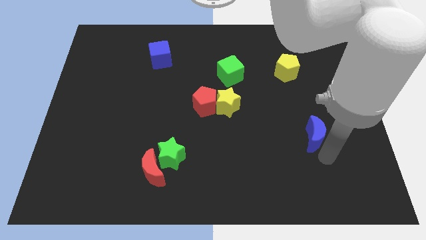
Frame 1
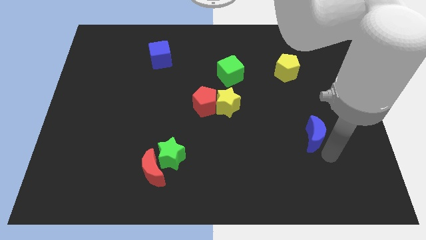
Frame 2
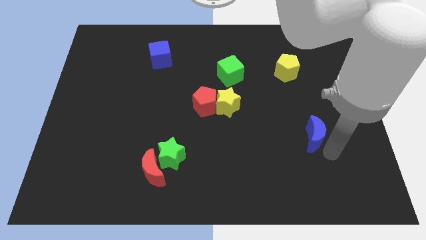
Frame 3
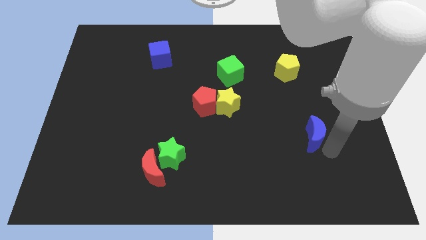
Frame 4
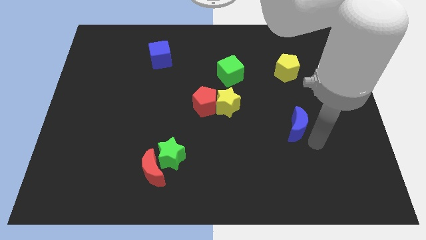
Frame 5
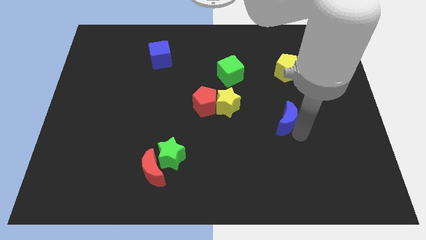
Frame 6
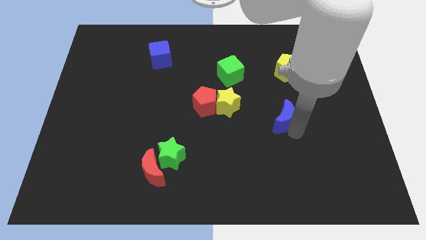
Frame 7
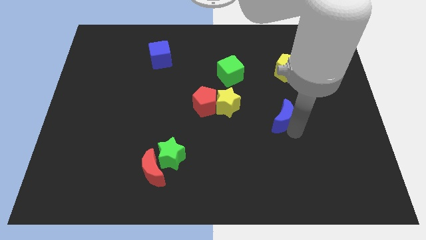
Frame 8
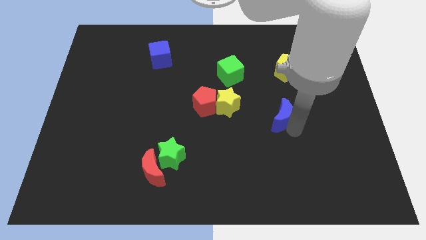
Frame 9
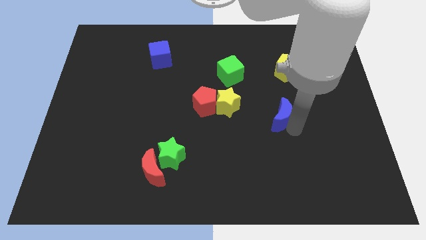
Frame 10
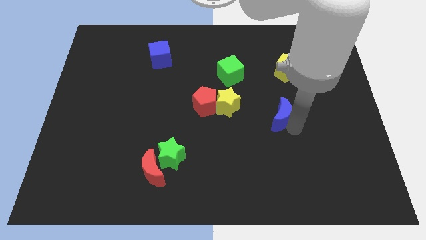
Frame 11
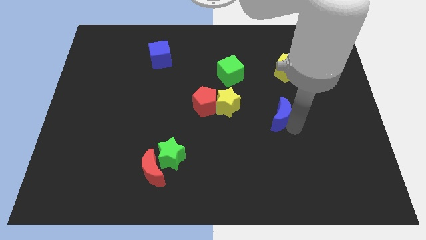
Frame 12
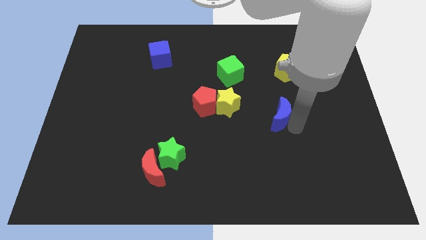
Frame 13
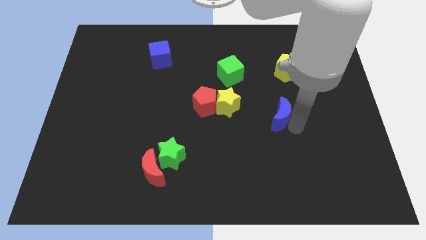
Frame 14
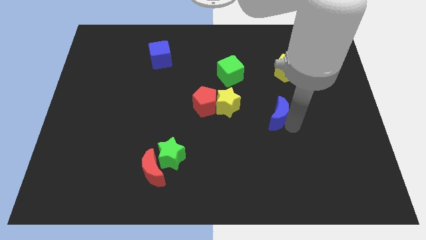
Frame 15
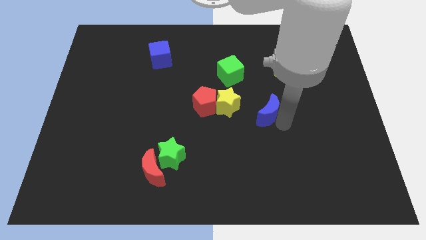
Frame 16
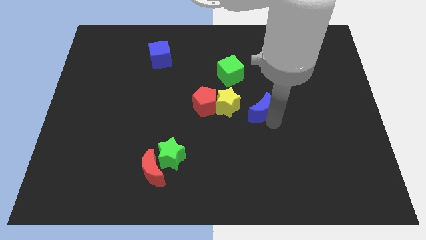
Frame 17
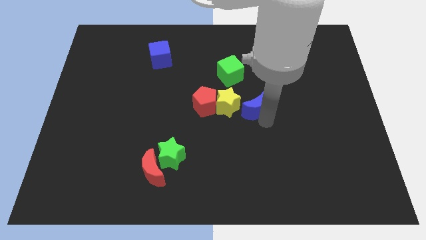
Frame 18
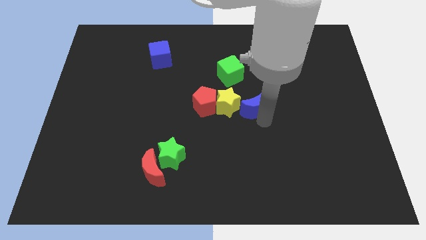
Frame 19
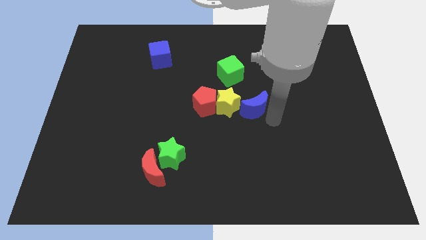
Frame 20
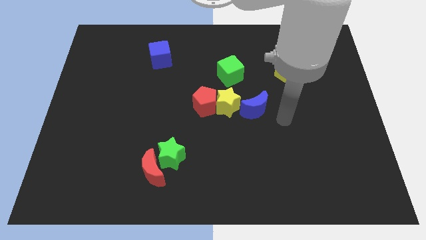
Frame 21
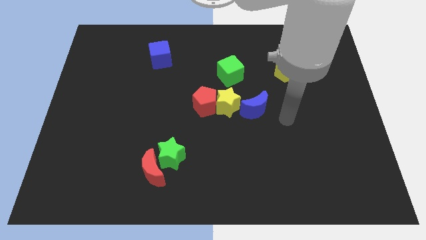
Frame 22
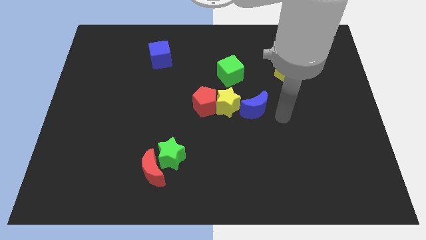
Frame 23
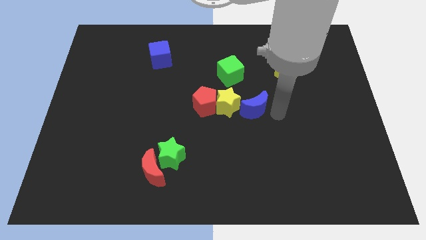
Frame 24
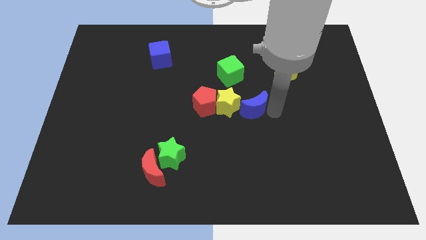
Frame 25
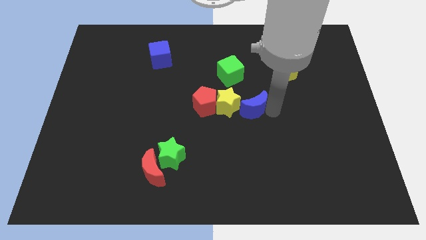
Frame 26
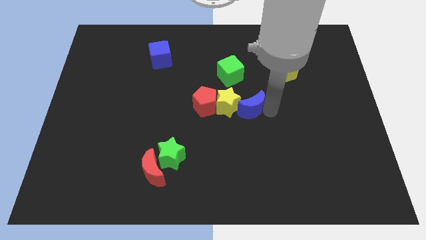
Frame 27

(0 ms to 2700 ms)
move the blue moon right beside the yellow star

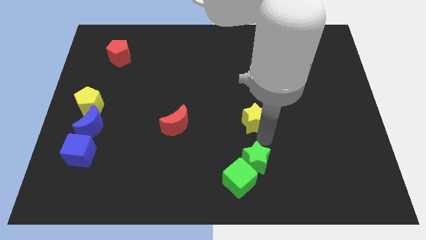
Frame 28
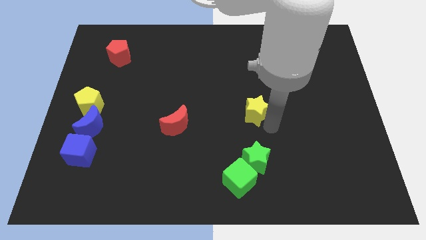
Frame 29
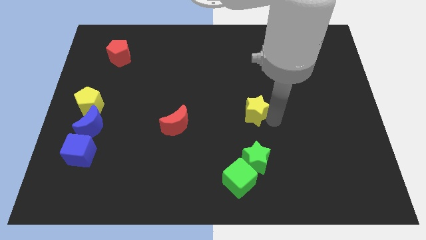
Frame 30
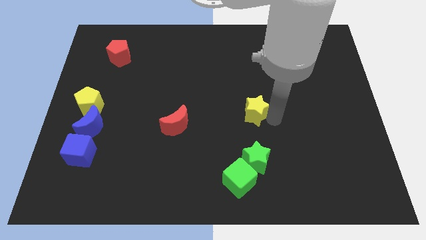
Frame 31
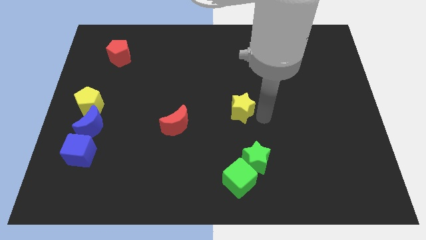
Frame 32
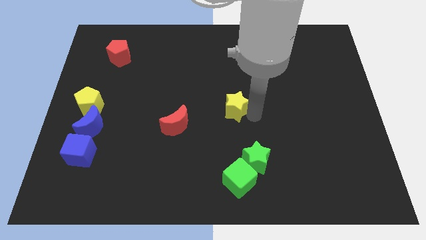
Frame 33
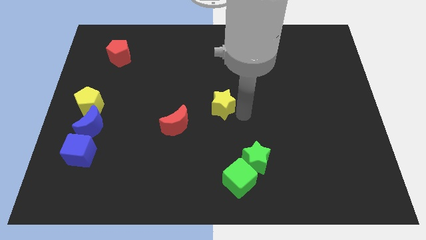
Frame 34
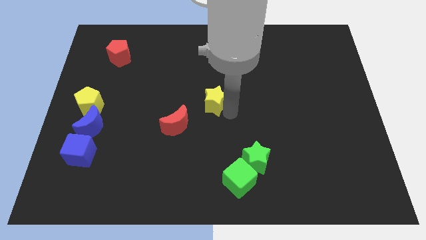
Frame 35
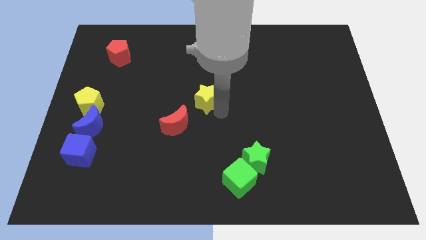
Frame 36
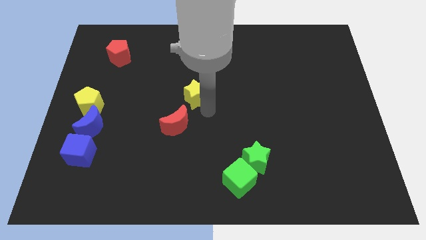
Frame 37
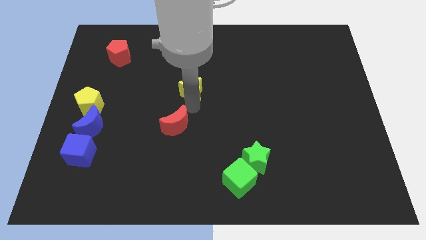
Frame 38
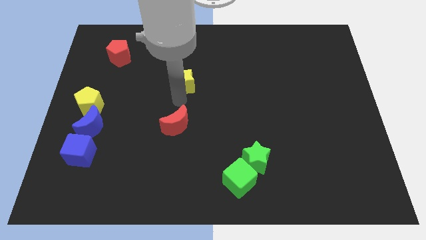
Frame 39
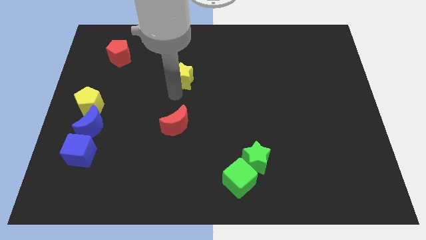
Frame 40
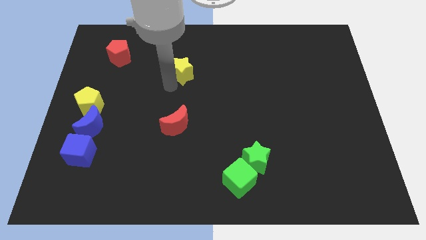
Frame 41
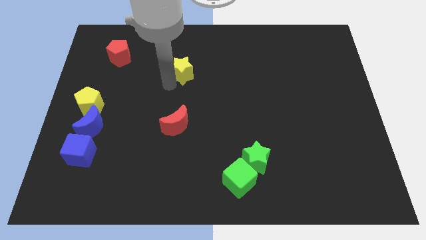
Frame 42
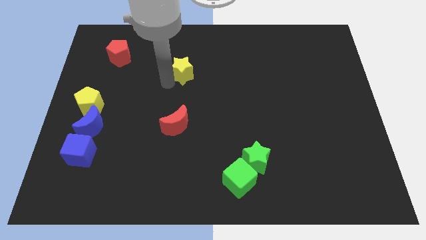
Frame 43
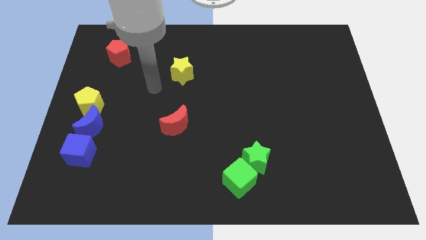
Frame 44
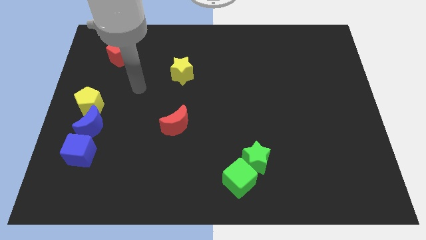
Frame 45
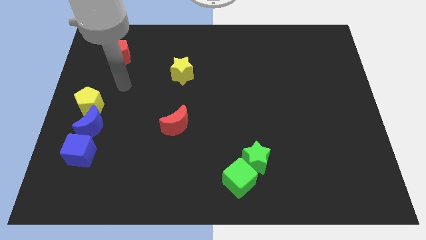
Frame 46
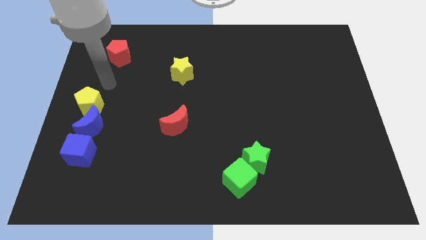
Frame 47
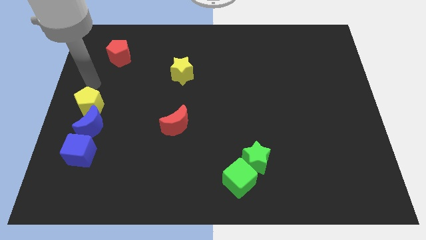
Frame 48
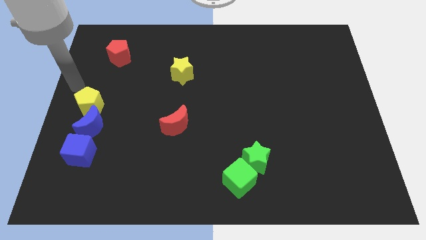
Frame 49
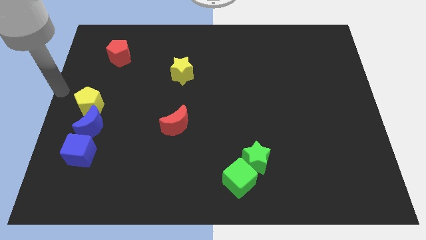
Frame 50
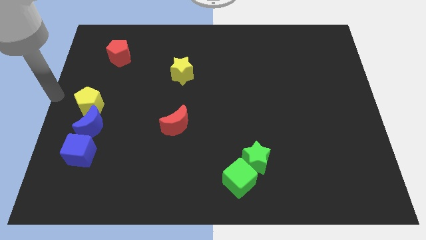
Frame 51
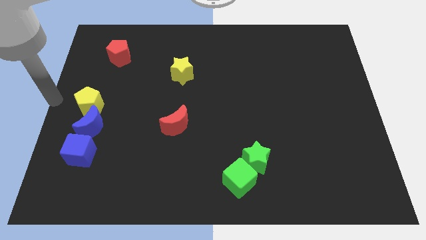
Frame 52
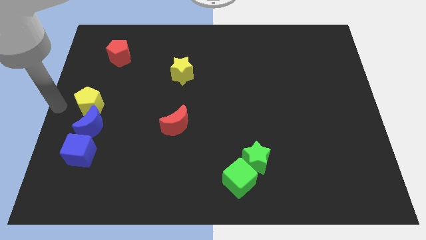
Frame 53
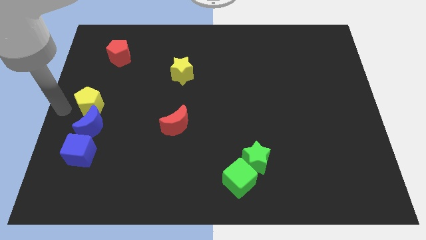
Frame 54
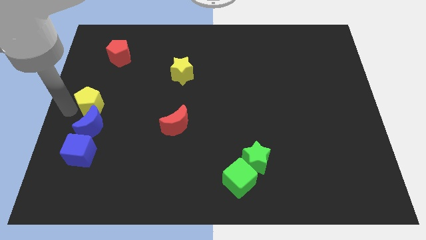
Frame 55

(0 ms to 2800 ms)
move yellow star to the bottom right of the red pentagon

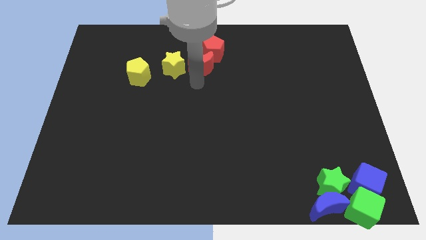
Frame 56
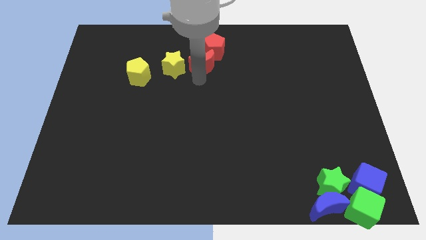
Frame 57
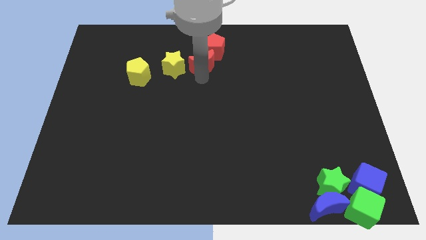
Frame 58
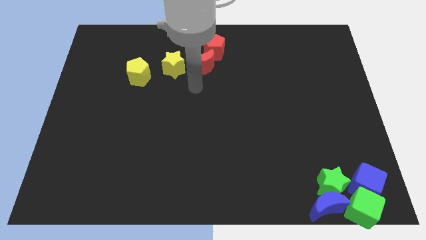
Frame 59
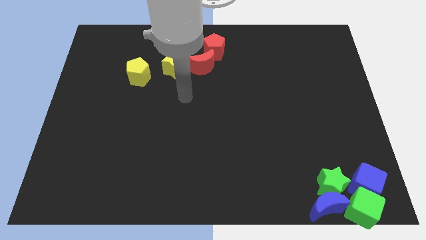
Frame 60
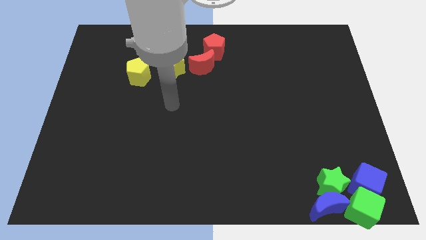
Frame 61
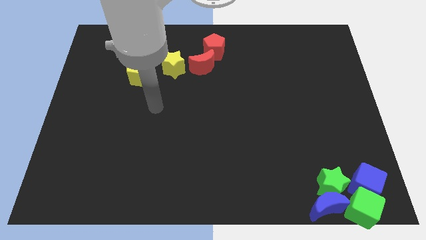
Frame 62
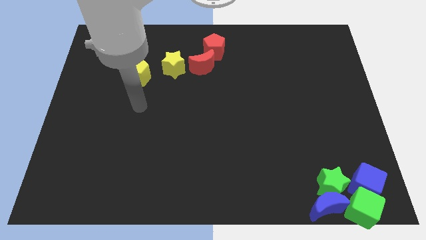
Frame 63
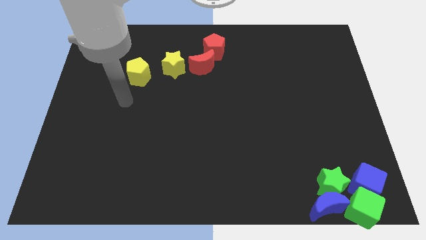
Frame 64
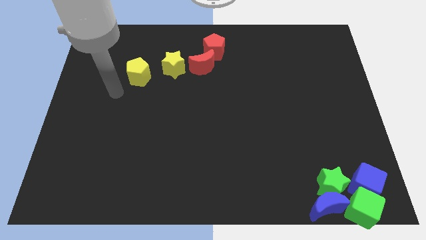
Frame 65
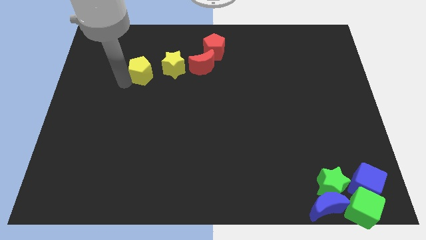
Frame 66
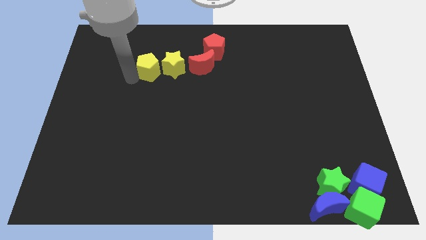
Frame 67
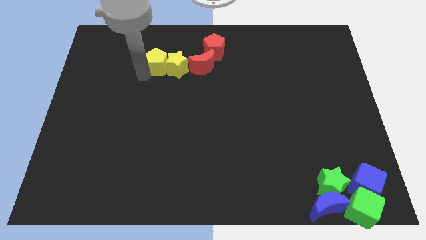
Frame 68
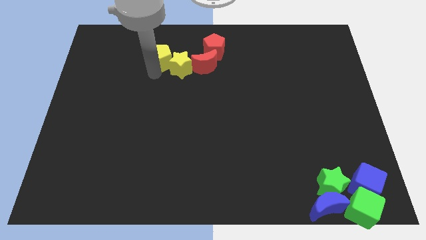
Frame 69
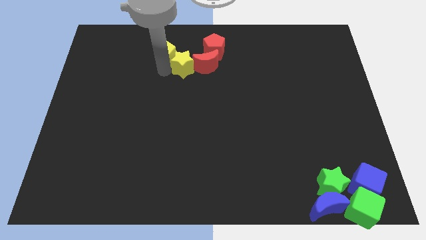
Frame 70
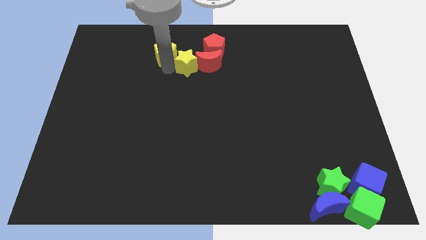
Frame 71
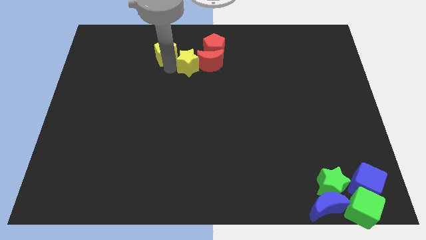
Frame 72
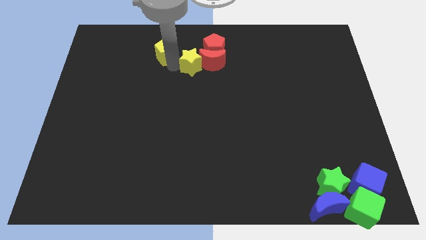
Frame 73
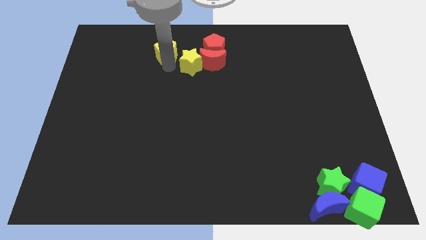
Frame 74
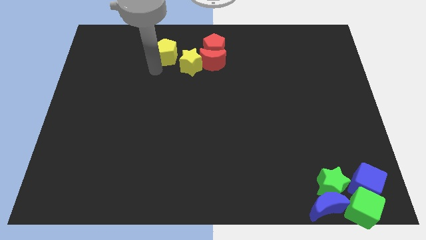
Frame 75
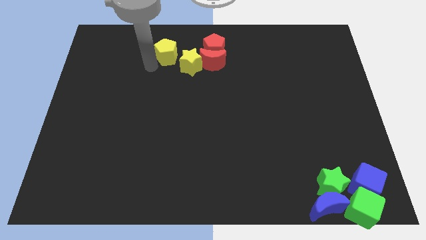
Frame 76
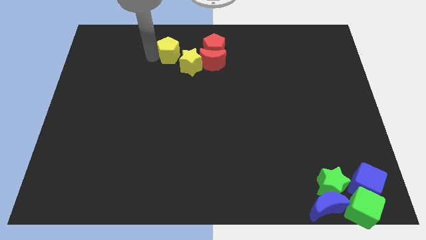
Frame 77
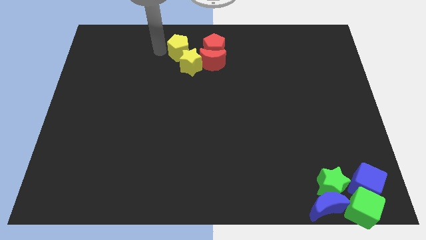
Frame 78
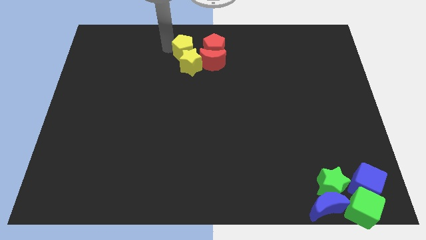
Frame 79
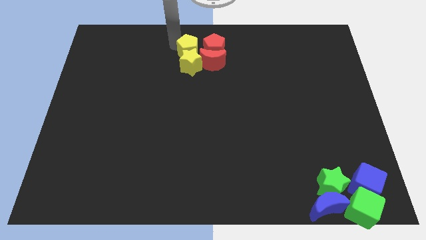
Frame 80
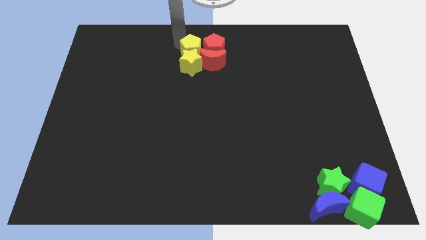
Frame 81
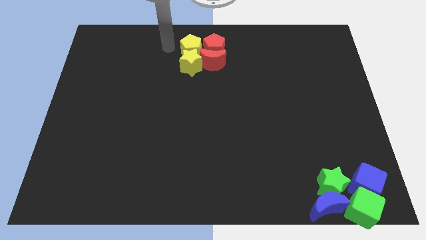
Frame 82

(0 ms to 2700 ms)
place the yellow pentagon above the yellow star

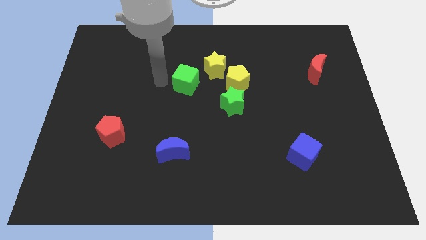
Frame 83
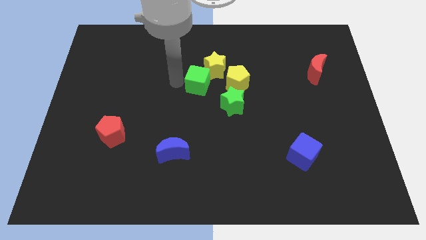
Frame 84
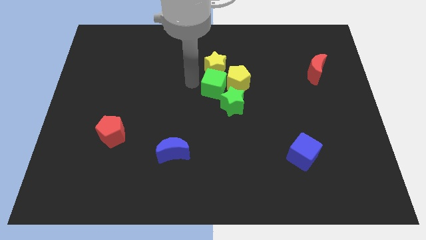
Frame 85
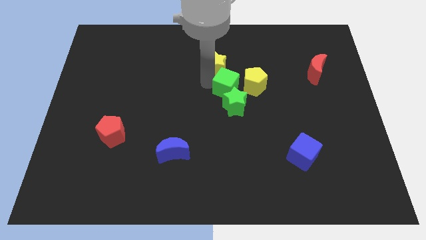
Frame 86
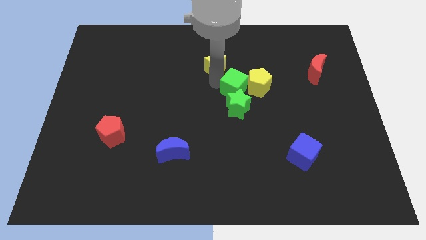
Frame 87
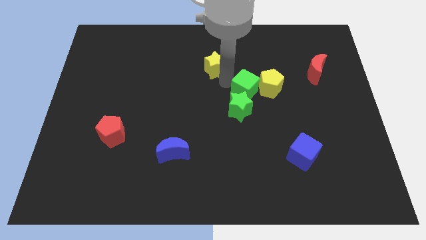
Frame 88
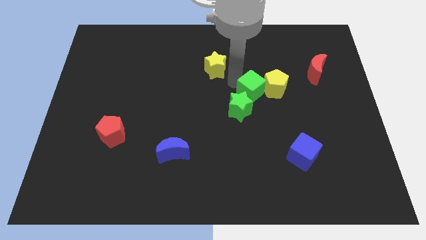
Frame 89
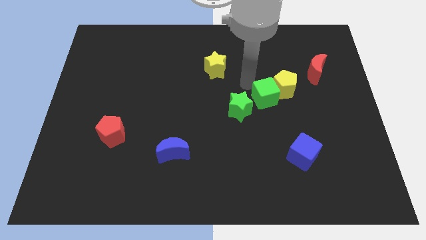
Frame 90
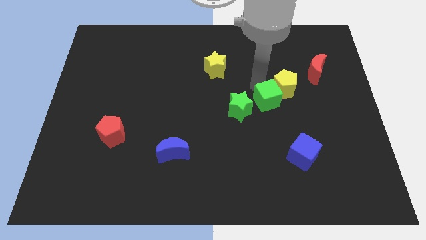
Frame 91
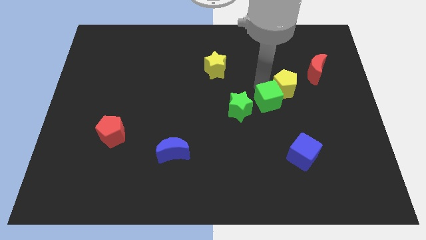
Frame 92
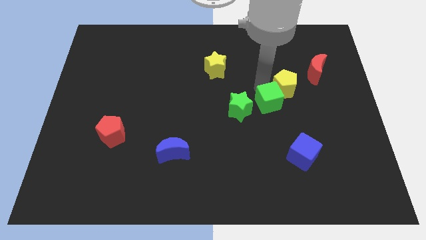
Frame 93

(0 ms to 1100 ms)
place green cube in between yellow pentagon and green star
